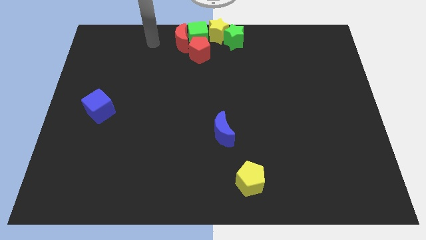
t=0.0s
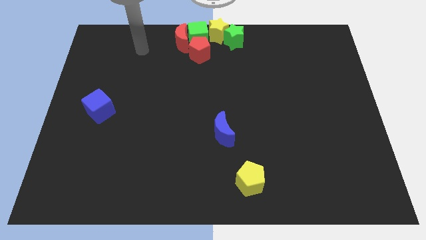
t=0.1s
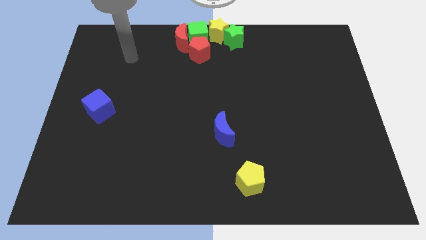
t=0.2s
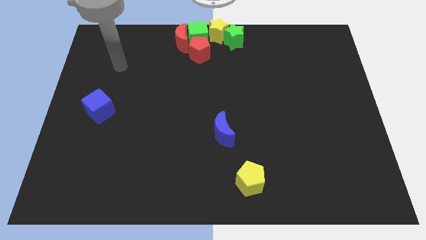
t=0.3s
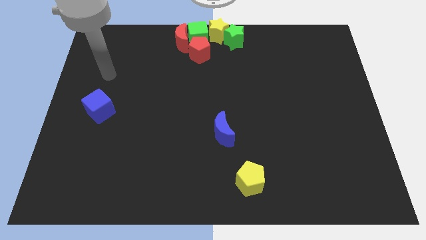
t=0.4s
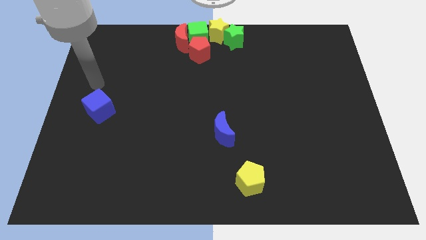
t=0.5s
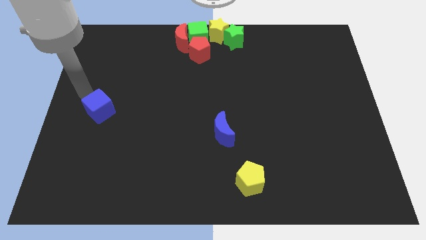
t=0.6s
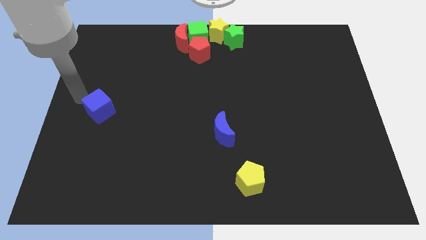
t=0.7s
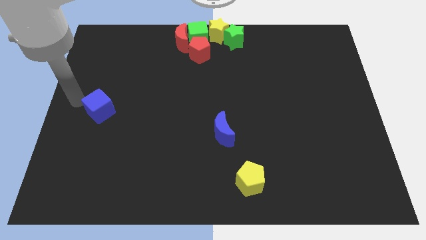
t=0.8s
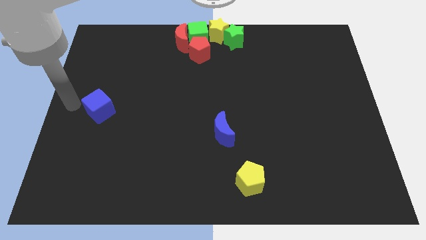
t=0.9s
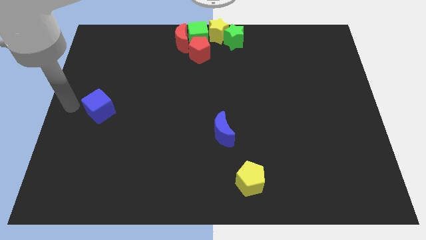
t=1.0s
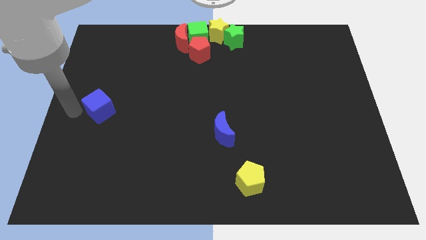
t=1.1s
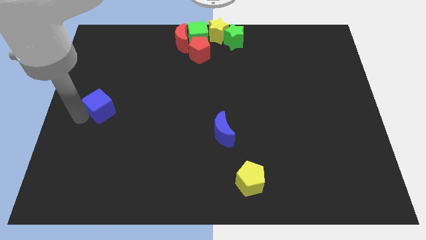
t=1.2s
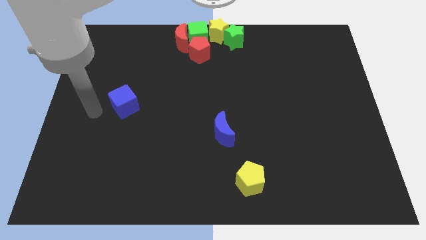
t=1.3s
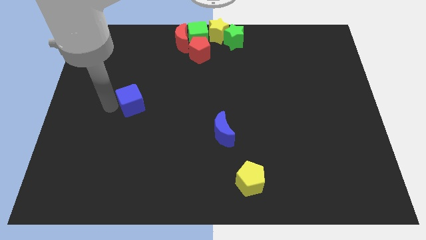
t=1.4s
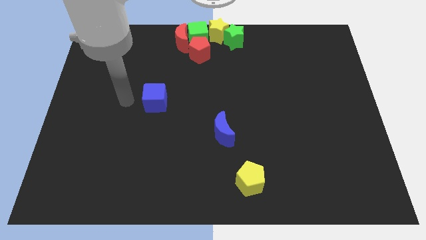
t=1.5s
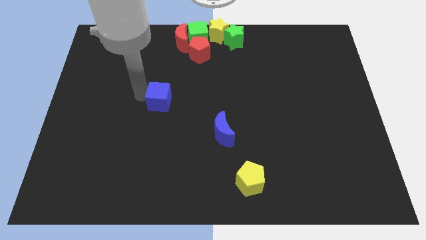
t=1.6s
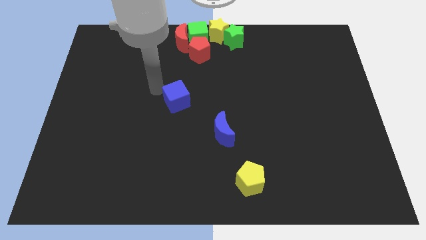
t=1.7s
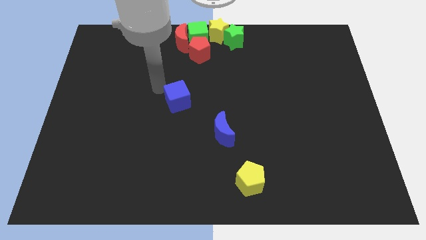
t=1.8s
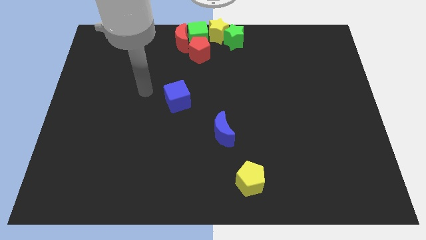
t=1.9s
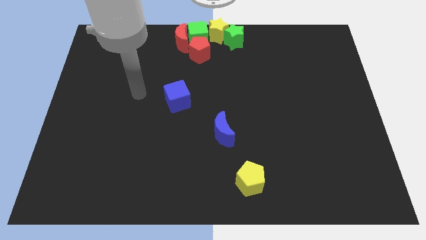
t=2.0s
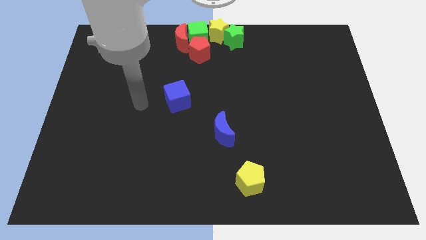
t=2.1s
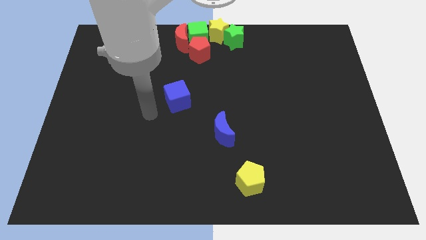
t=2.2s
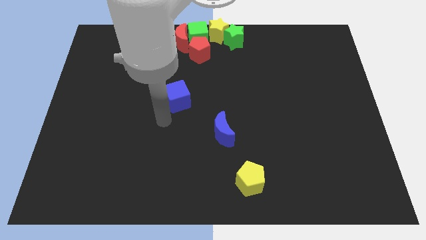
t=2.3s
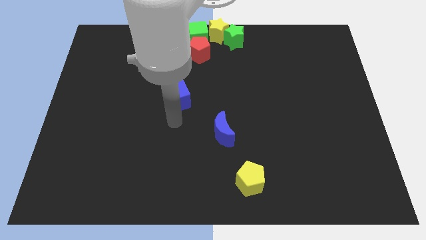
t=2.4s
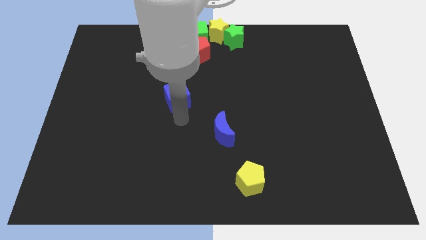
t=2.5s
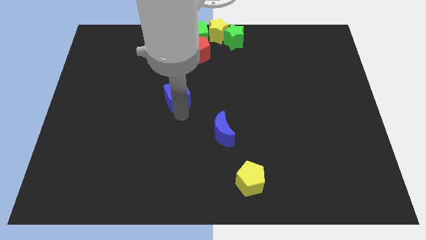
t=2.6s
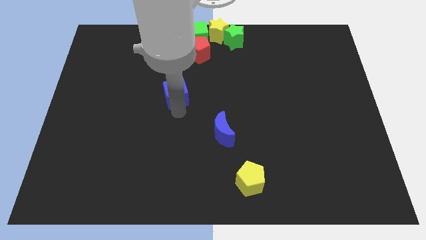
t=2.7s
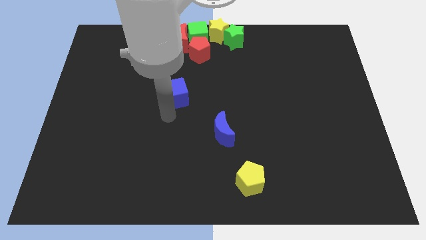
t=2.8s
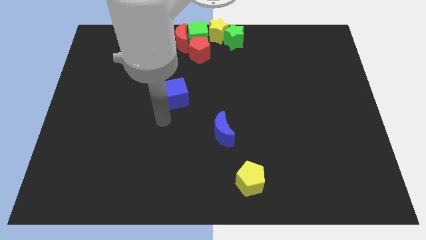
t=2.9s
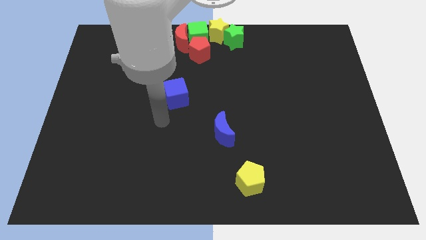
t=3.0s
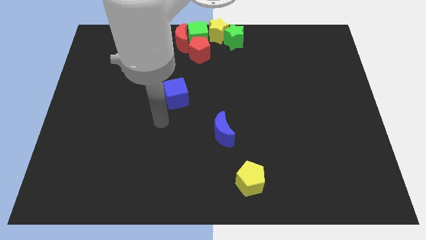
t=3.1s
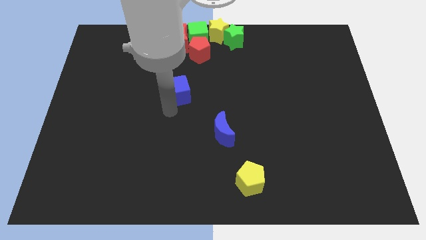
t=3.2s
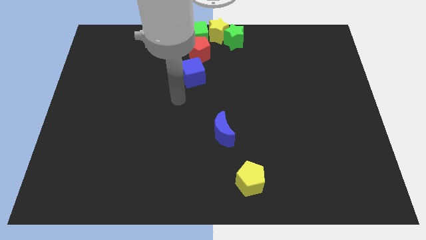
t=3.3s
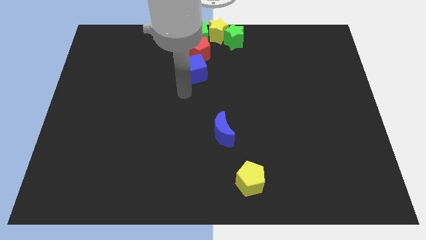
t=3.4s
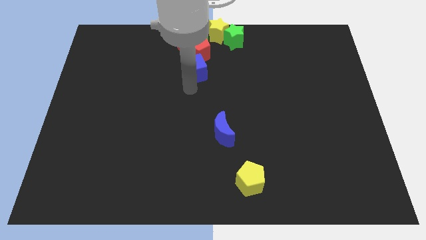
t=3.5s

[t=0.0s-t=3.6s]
move the blue cube to the group of blocks

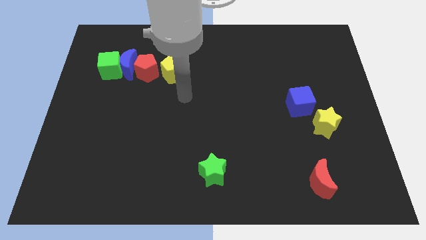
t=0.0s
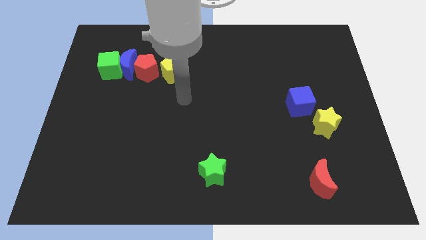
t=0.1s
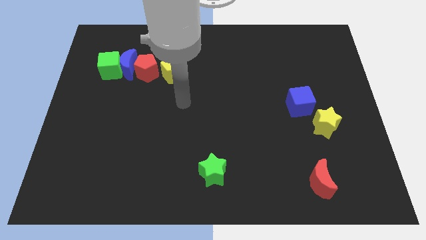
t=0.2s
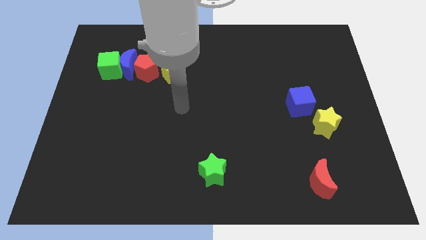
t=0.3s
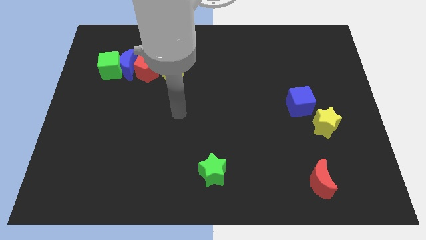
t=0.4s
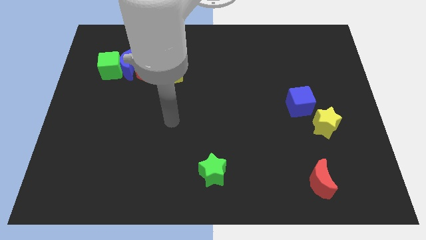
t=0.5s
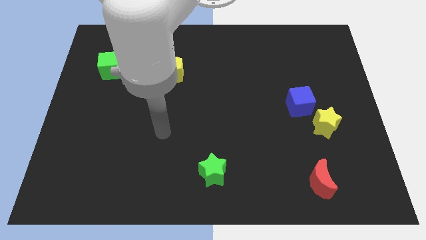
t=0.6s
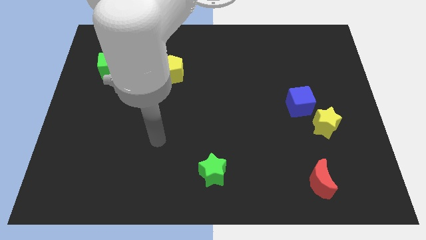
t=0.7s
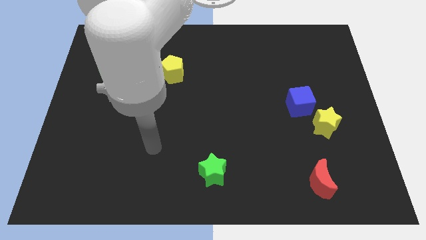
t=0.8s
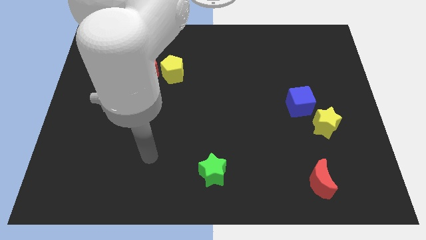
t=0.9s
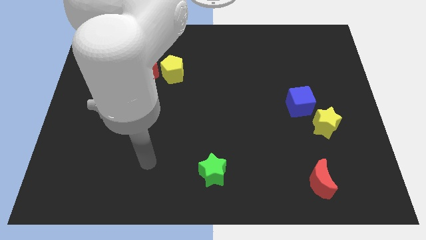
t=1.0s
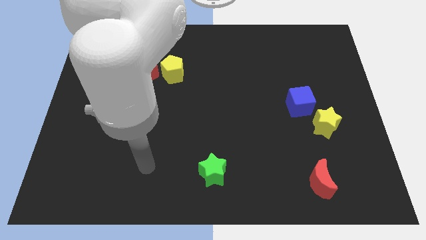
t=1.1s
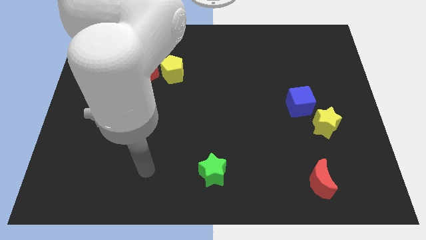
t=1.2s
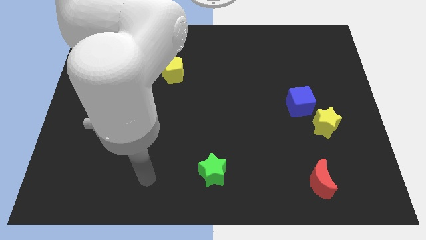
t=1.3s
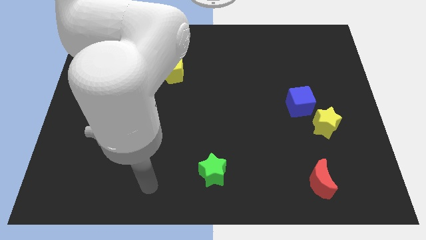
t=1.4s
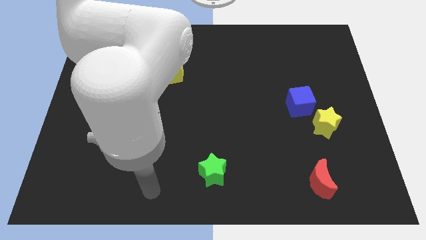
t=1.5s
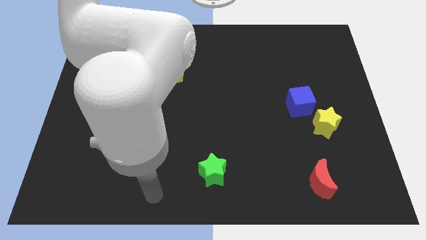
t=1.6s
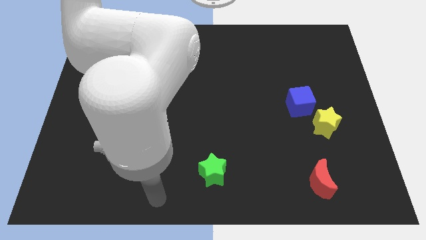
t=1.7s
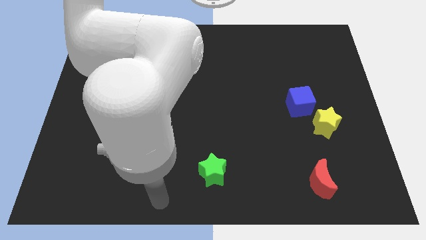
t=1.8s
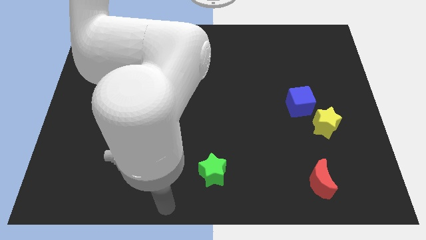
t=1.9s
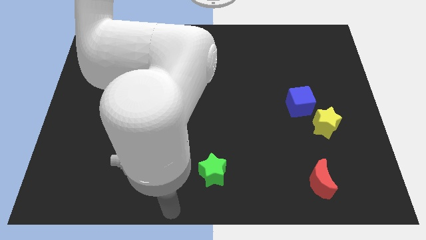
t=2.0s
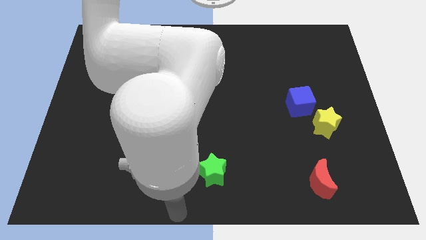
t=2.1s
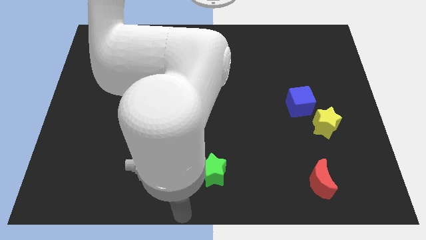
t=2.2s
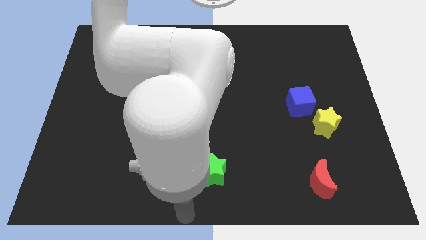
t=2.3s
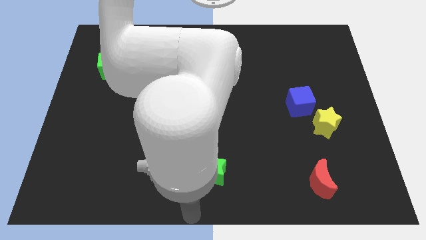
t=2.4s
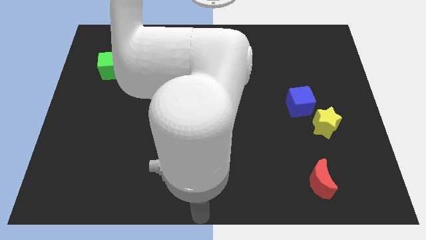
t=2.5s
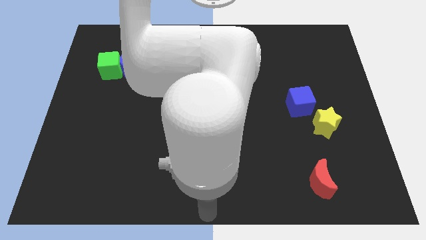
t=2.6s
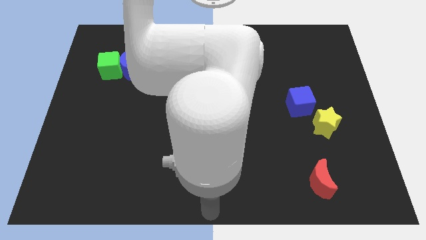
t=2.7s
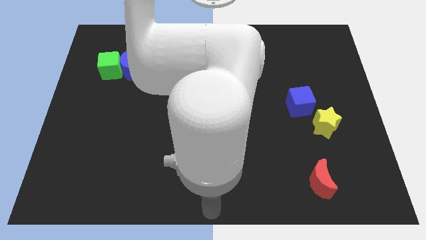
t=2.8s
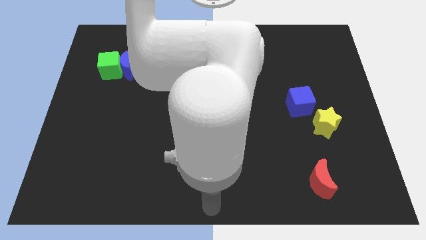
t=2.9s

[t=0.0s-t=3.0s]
move your arm below the green star

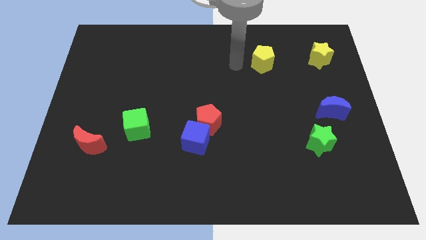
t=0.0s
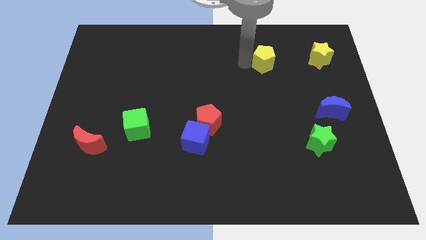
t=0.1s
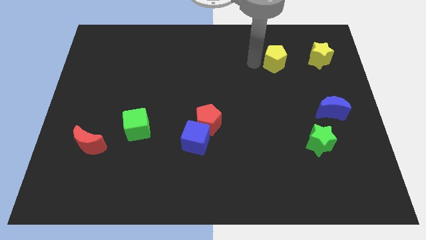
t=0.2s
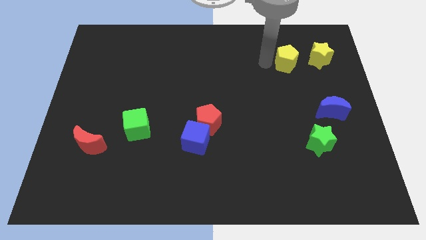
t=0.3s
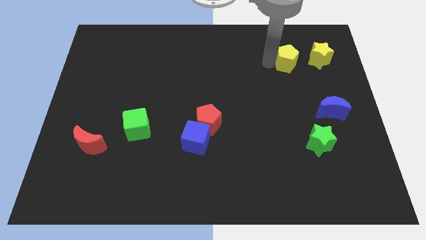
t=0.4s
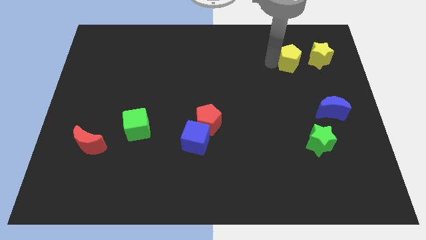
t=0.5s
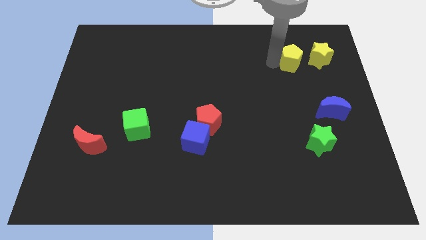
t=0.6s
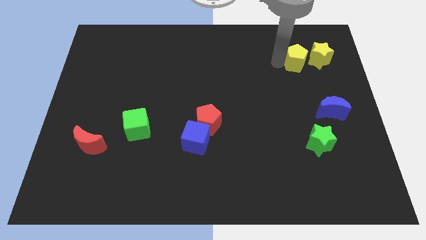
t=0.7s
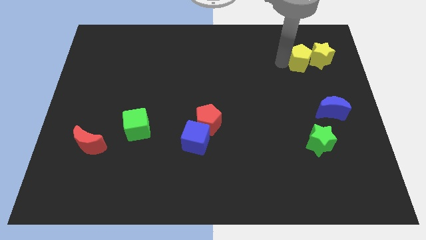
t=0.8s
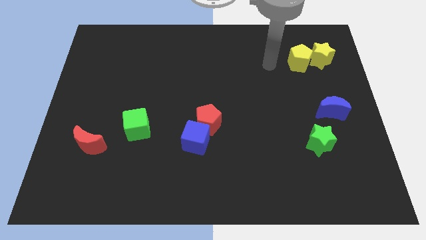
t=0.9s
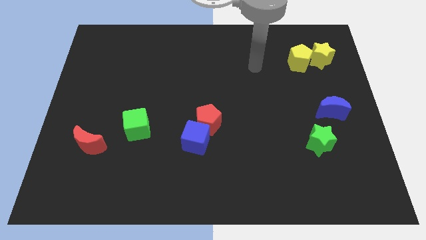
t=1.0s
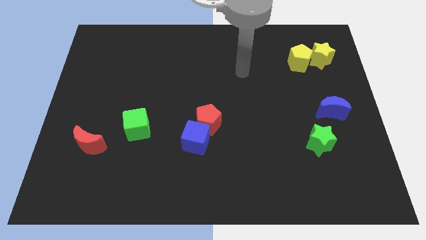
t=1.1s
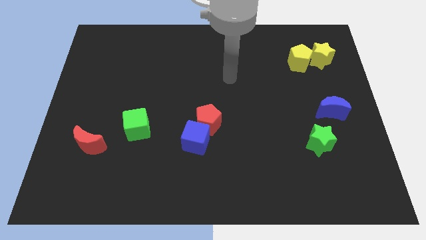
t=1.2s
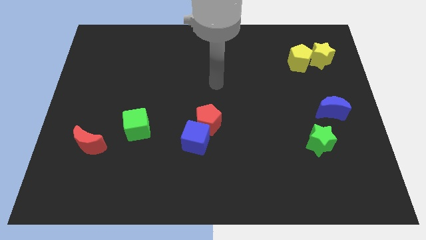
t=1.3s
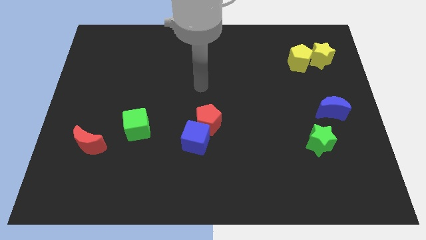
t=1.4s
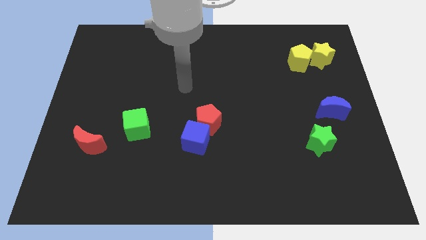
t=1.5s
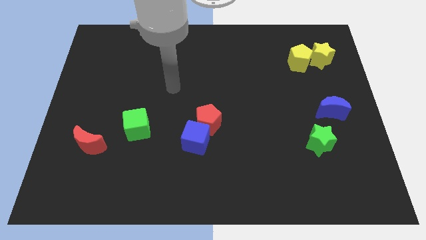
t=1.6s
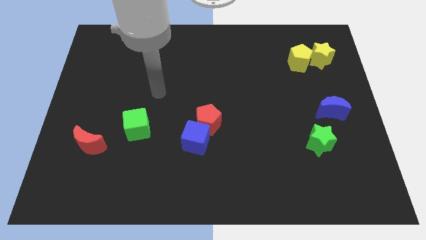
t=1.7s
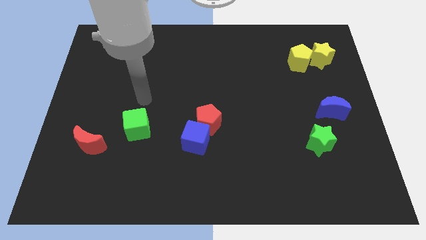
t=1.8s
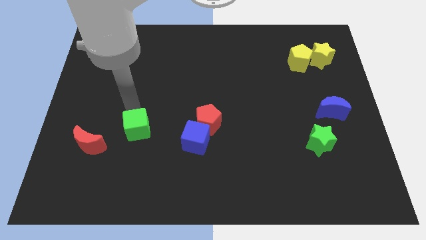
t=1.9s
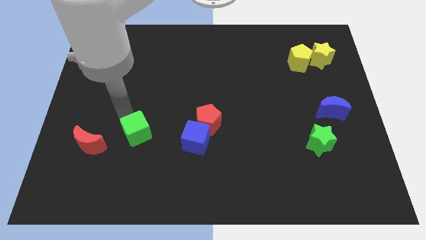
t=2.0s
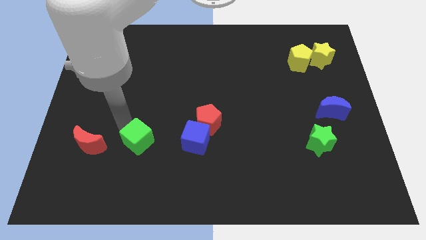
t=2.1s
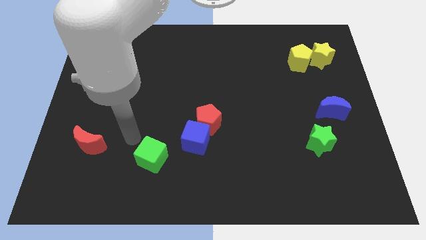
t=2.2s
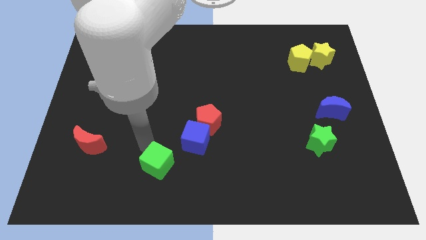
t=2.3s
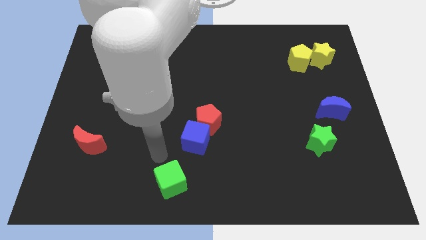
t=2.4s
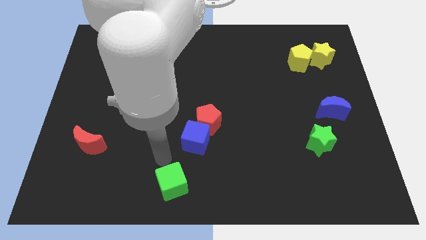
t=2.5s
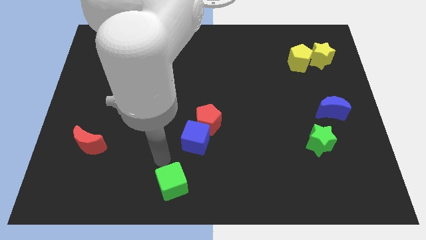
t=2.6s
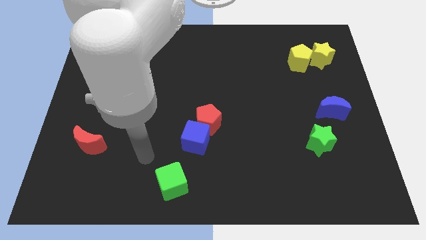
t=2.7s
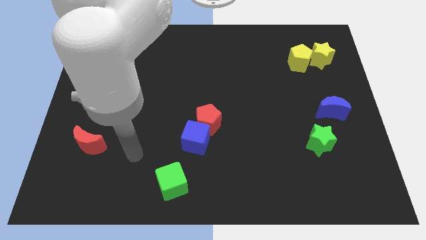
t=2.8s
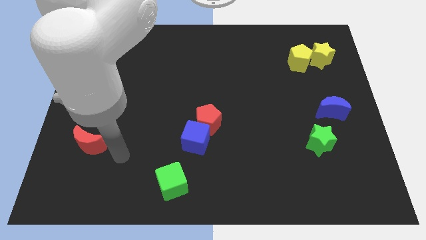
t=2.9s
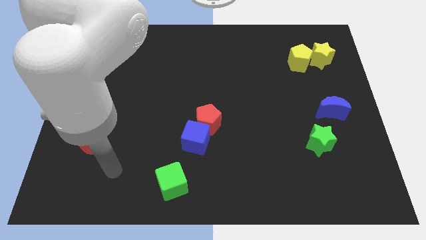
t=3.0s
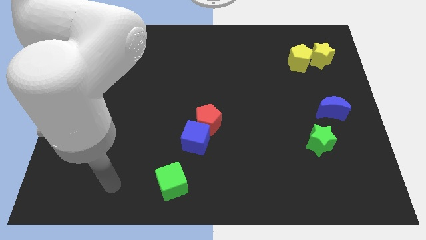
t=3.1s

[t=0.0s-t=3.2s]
place the green cube below the blue cube
